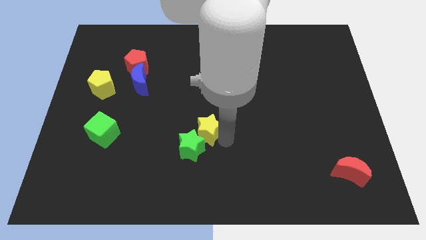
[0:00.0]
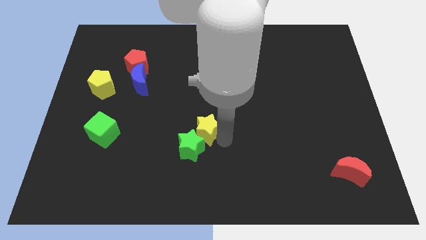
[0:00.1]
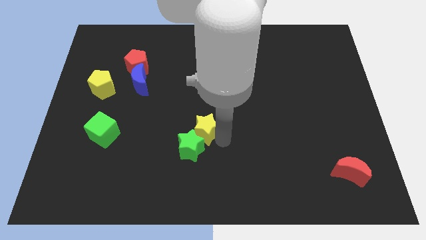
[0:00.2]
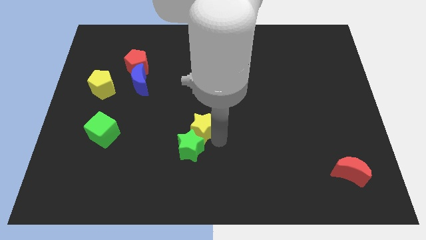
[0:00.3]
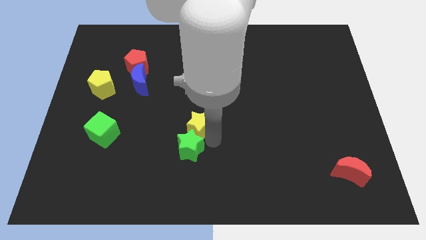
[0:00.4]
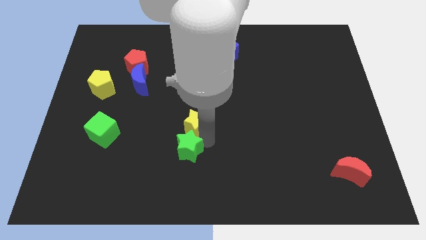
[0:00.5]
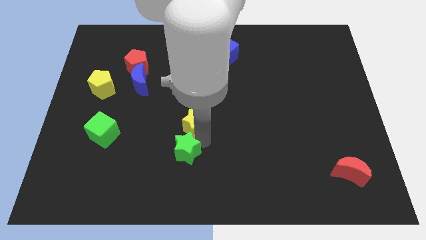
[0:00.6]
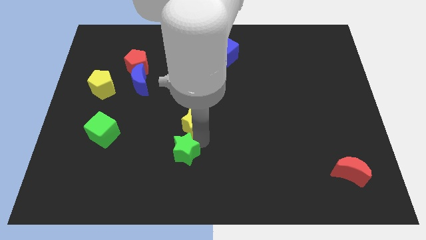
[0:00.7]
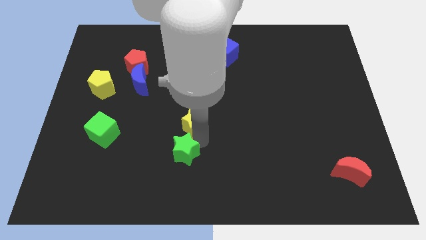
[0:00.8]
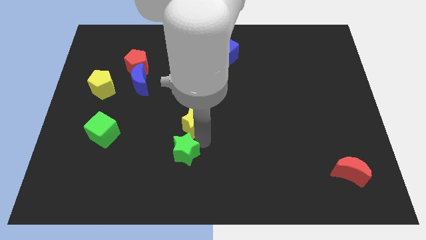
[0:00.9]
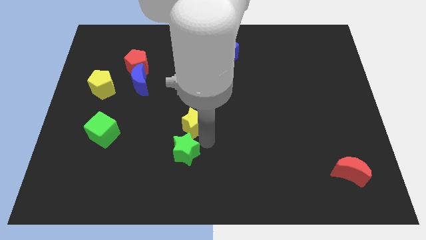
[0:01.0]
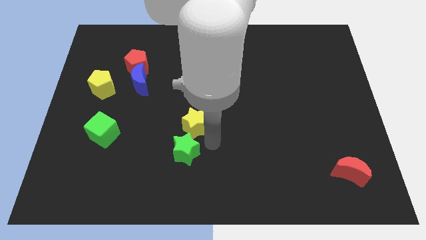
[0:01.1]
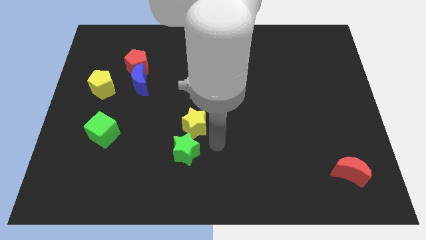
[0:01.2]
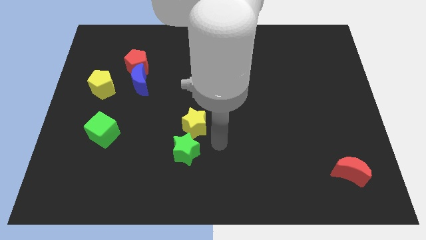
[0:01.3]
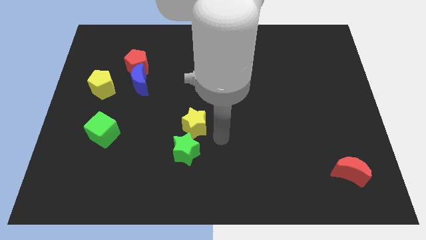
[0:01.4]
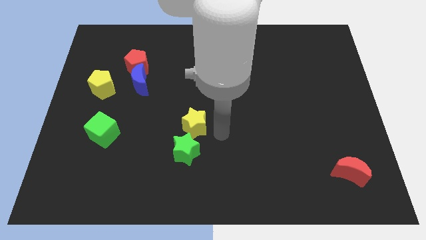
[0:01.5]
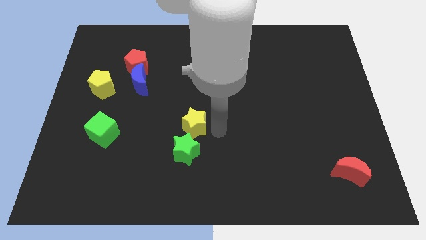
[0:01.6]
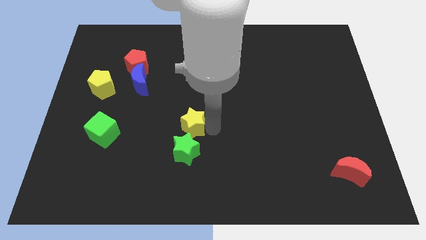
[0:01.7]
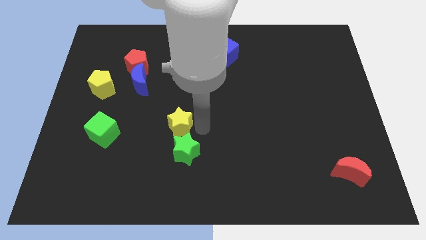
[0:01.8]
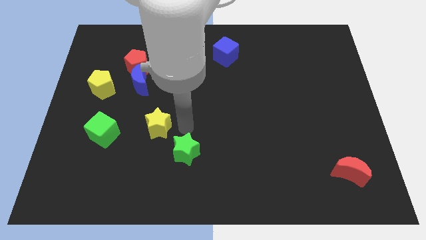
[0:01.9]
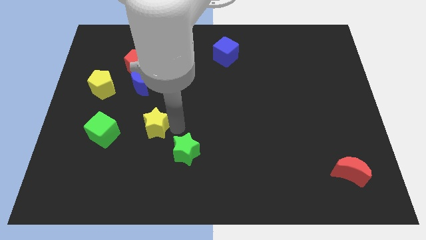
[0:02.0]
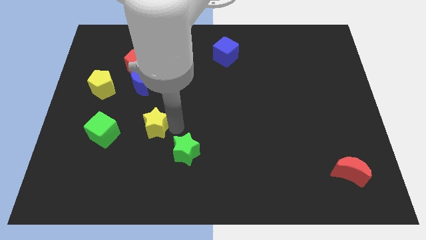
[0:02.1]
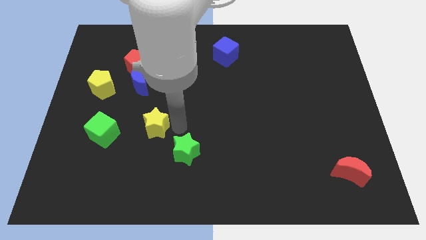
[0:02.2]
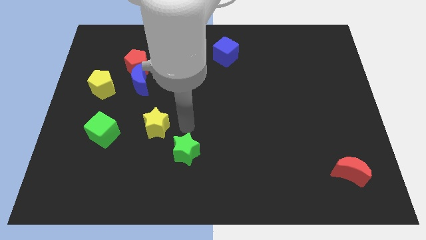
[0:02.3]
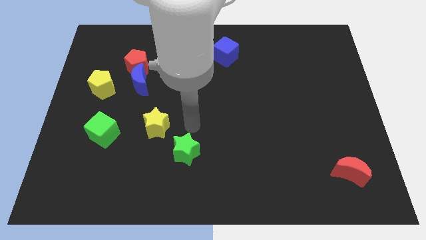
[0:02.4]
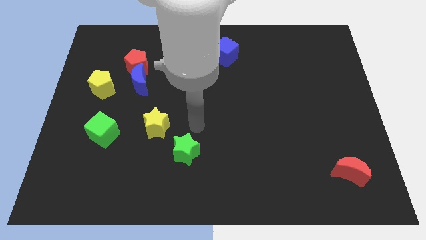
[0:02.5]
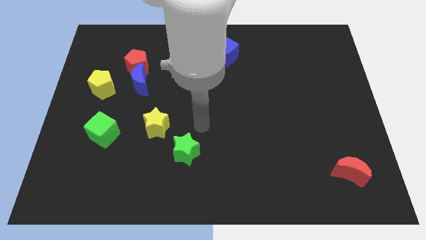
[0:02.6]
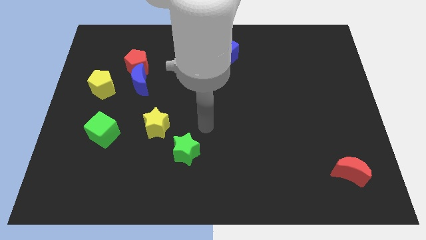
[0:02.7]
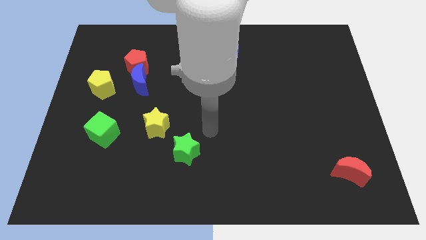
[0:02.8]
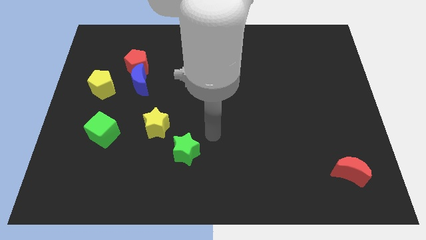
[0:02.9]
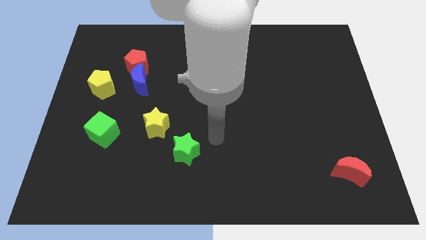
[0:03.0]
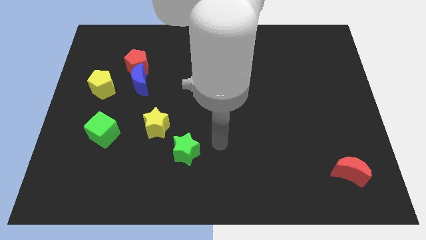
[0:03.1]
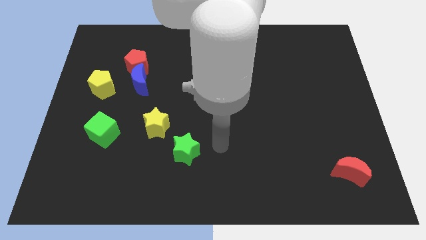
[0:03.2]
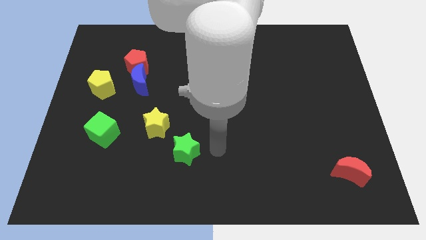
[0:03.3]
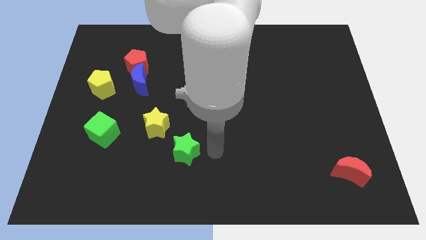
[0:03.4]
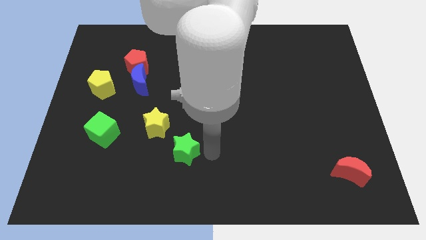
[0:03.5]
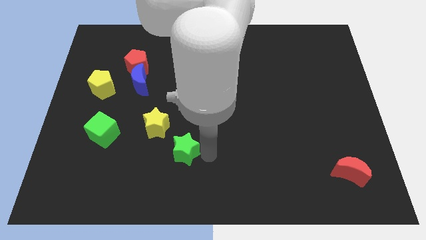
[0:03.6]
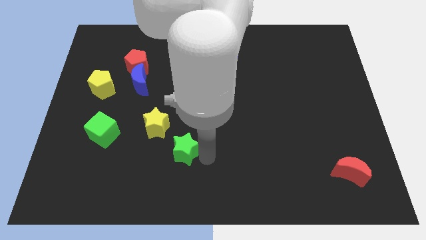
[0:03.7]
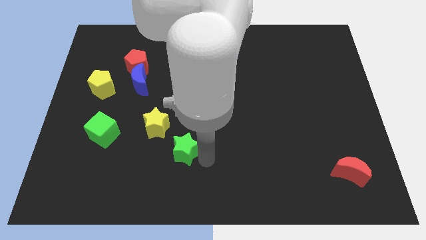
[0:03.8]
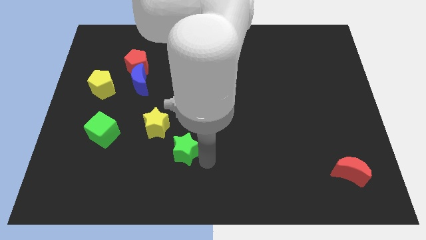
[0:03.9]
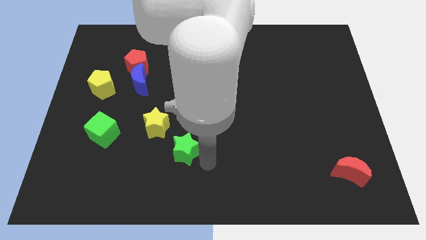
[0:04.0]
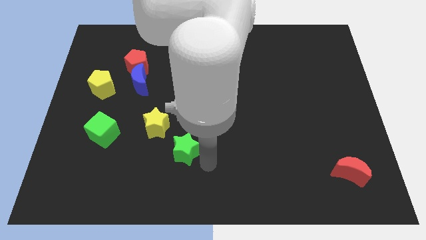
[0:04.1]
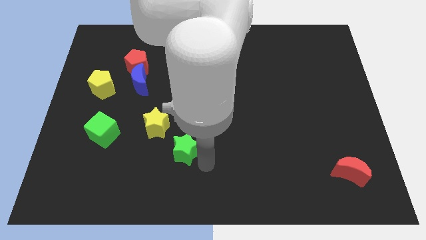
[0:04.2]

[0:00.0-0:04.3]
separate the yellow star and green star

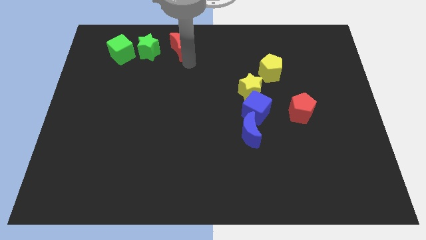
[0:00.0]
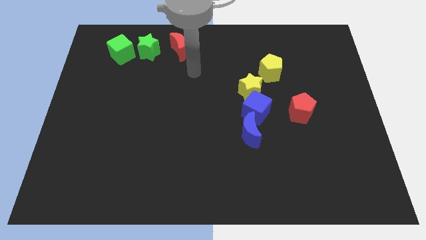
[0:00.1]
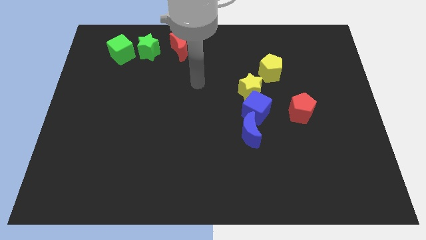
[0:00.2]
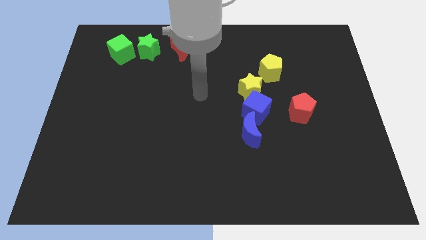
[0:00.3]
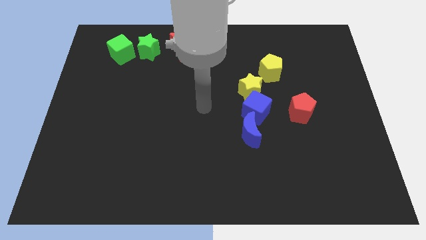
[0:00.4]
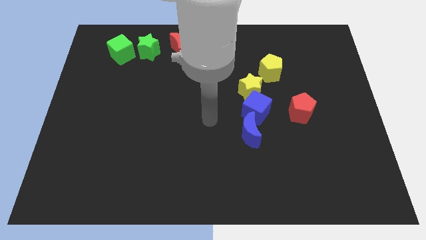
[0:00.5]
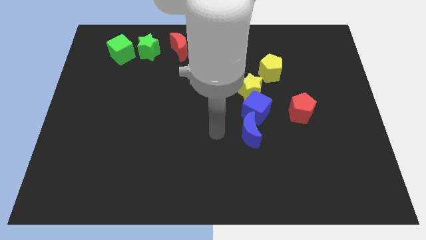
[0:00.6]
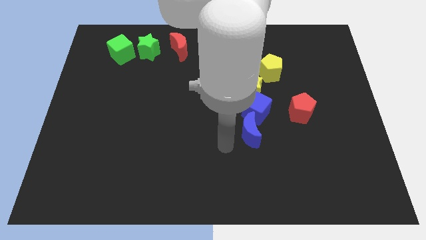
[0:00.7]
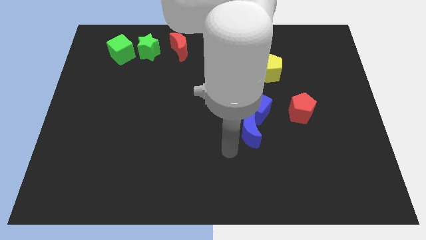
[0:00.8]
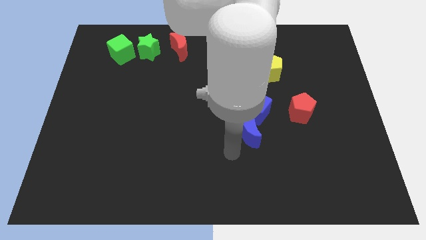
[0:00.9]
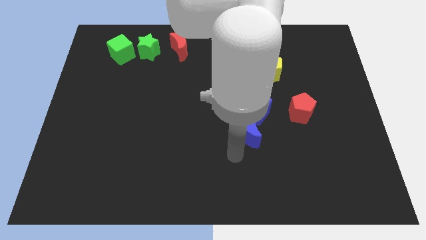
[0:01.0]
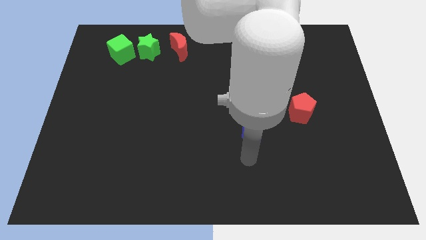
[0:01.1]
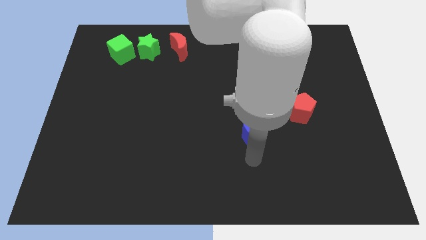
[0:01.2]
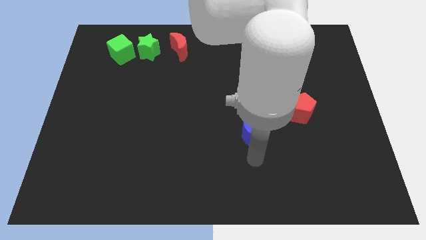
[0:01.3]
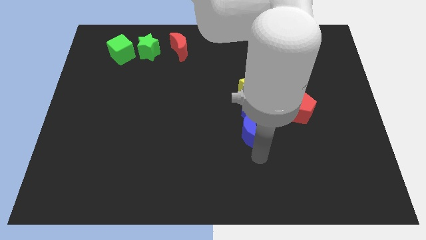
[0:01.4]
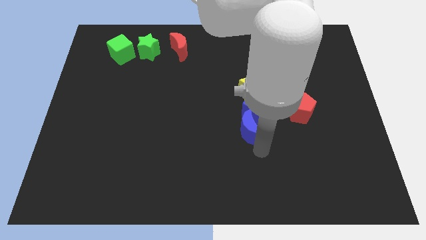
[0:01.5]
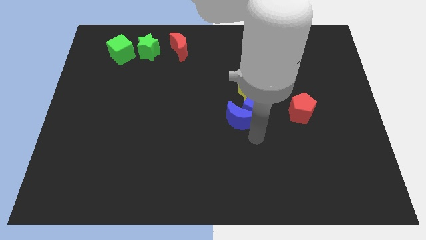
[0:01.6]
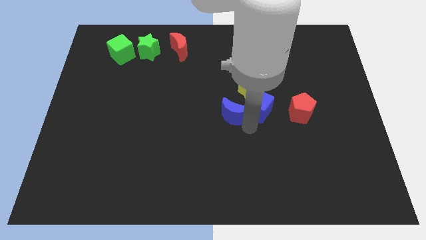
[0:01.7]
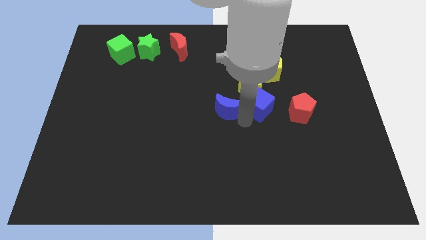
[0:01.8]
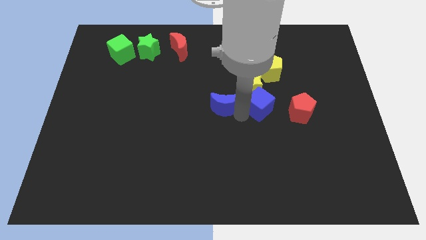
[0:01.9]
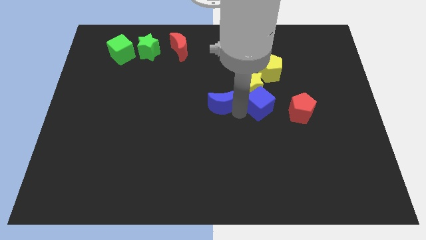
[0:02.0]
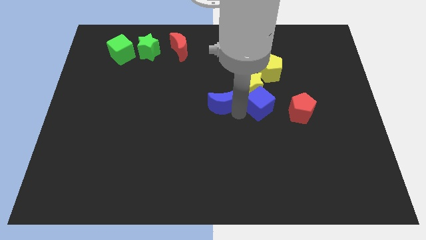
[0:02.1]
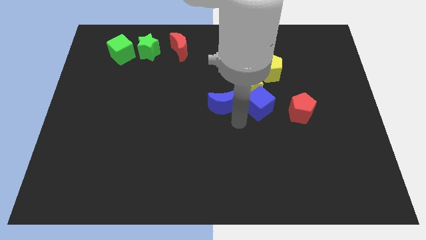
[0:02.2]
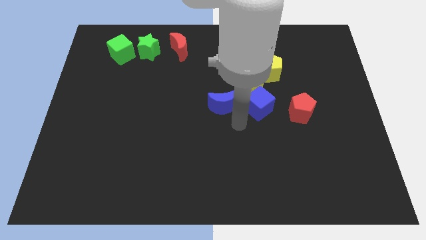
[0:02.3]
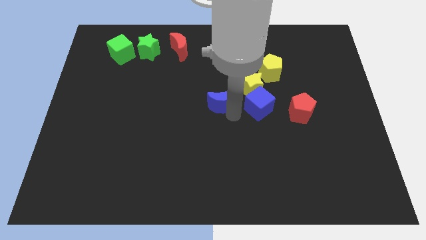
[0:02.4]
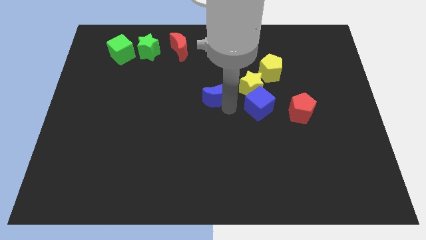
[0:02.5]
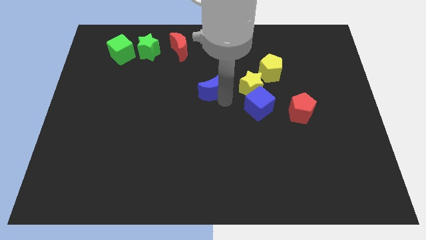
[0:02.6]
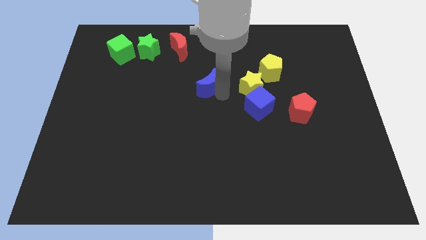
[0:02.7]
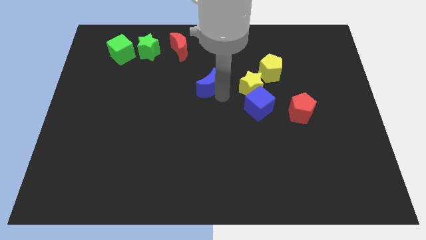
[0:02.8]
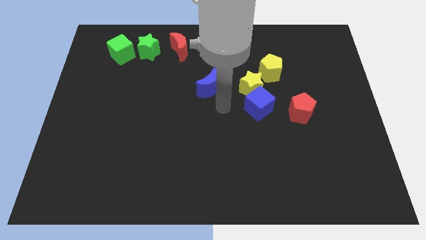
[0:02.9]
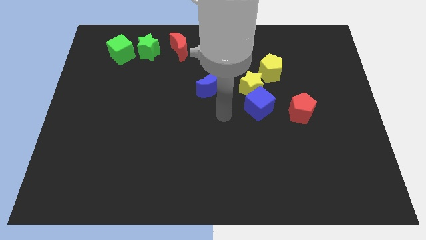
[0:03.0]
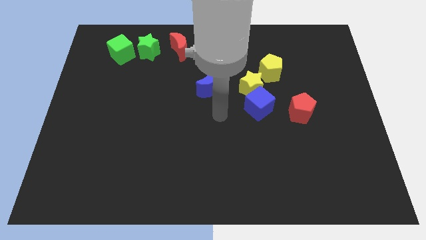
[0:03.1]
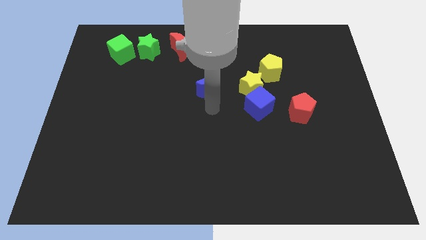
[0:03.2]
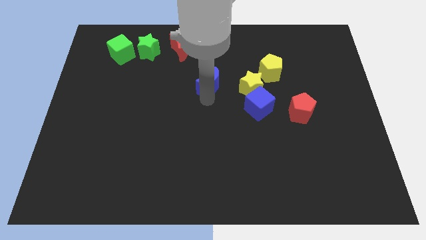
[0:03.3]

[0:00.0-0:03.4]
separate the blue moon from the blue cube

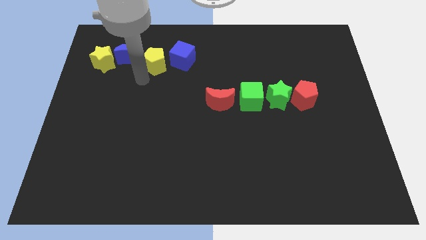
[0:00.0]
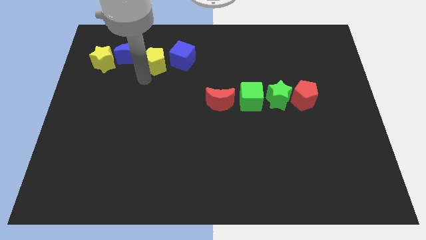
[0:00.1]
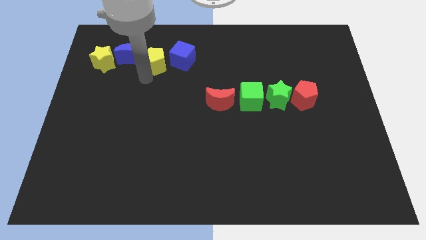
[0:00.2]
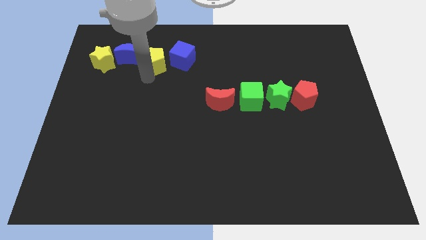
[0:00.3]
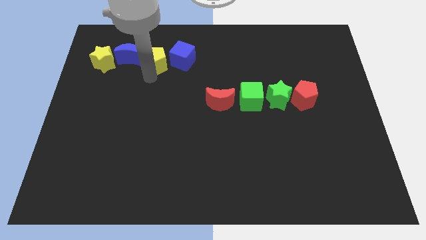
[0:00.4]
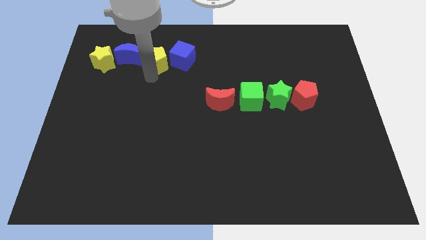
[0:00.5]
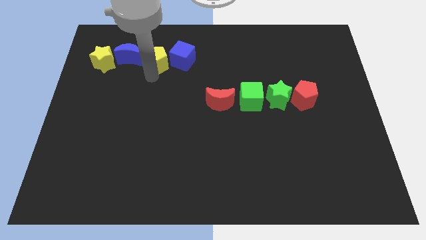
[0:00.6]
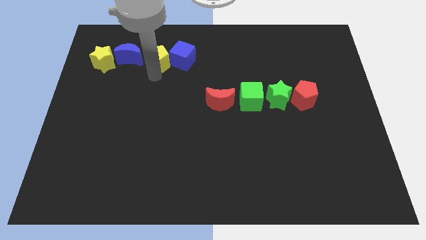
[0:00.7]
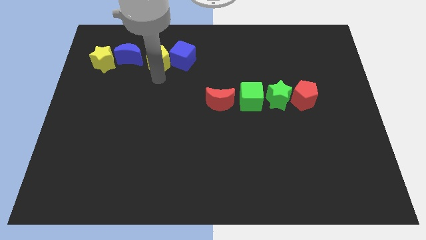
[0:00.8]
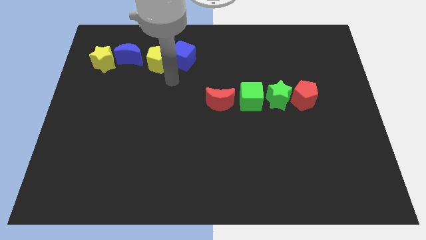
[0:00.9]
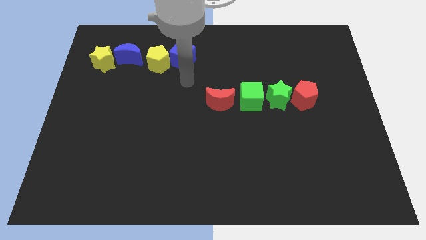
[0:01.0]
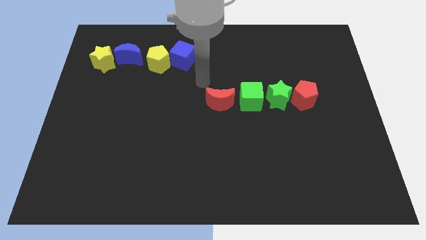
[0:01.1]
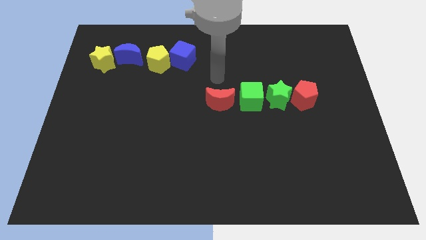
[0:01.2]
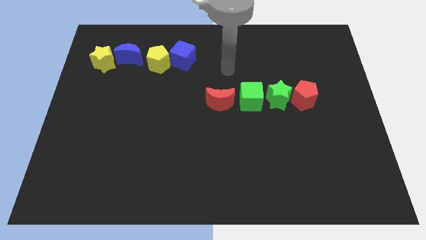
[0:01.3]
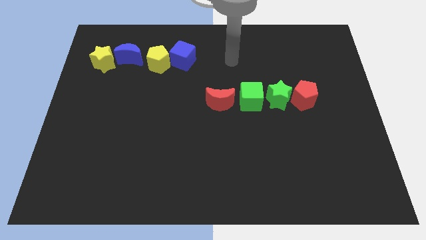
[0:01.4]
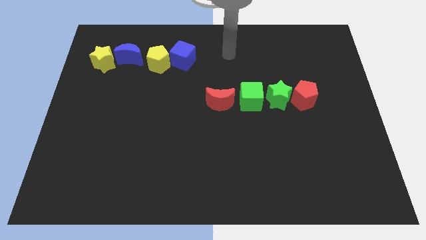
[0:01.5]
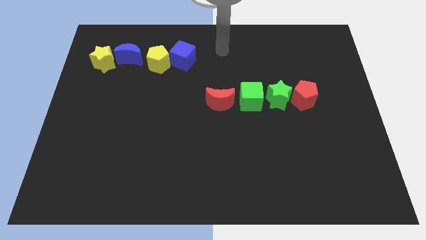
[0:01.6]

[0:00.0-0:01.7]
slightly move the yellow pentagon into blue cube
